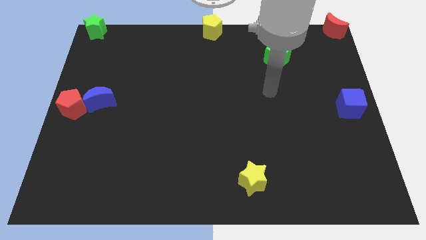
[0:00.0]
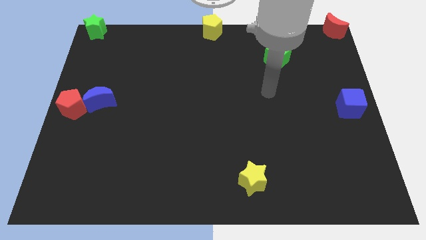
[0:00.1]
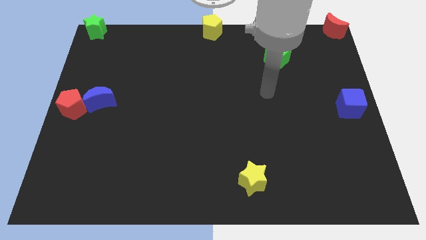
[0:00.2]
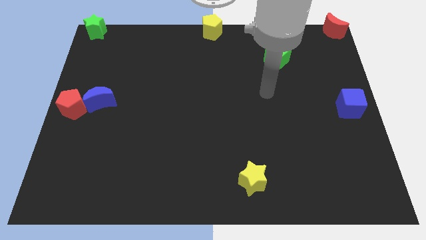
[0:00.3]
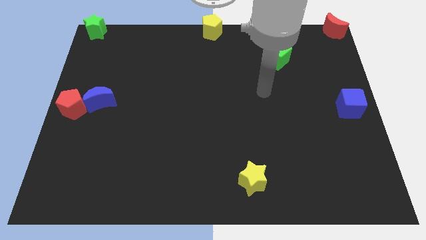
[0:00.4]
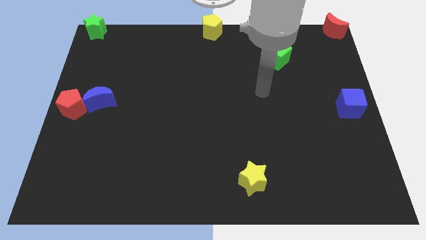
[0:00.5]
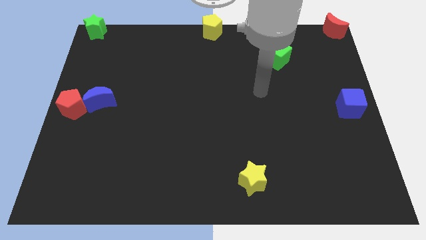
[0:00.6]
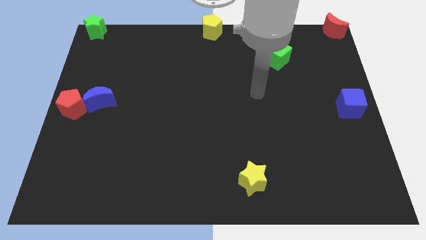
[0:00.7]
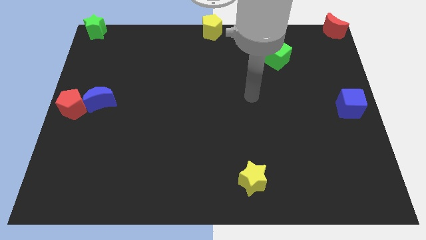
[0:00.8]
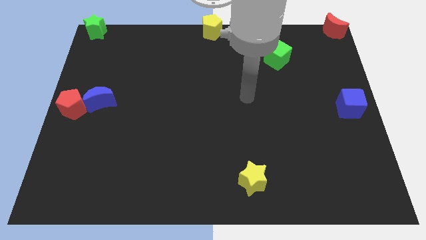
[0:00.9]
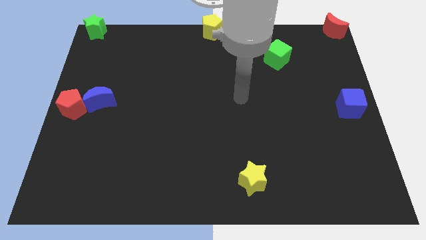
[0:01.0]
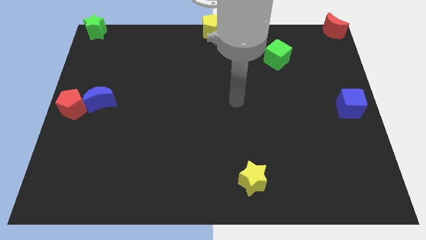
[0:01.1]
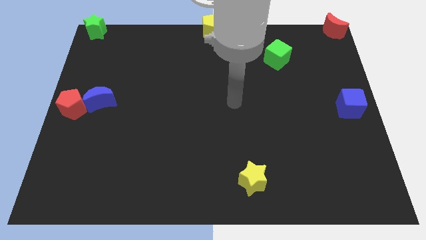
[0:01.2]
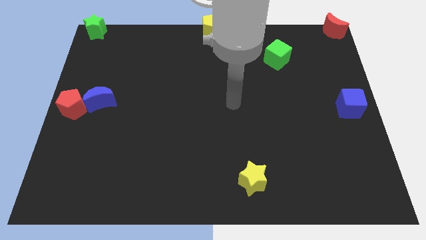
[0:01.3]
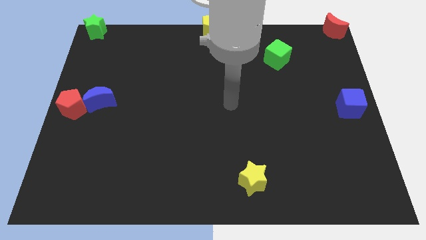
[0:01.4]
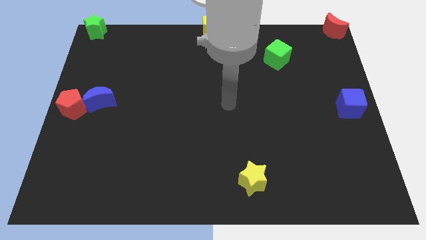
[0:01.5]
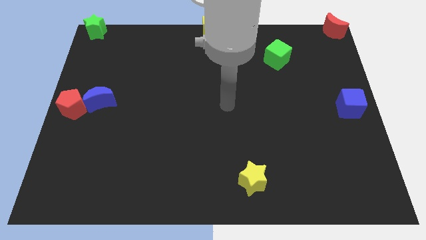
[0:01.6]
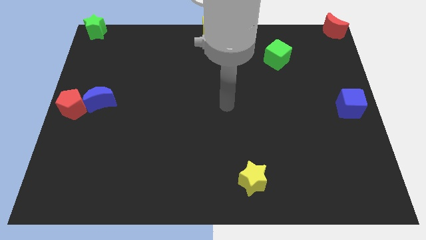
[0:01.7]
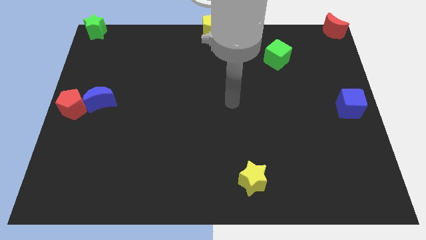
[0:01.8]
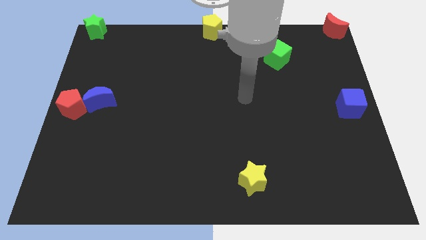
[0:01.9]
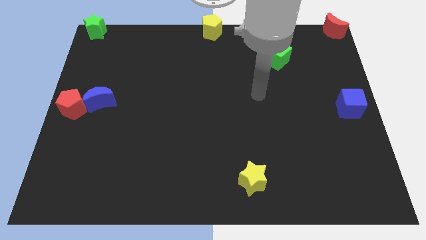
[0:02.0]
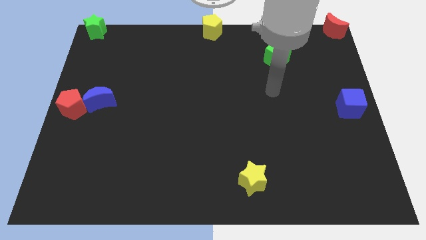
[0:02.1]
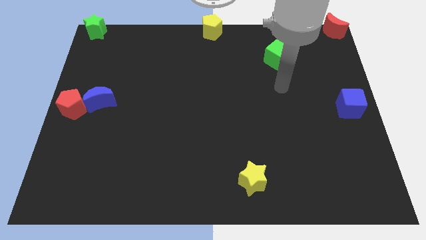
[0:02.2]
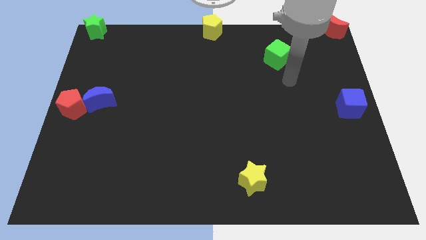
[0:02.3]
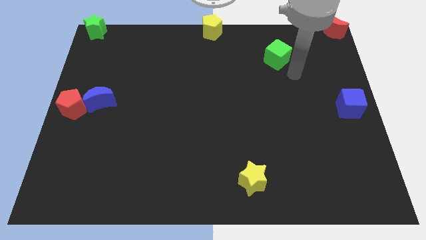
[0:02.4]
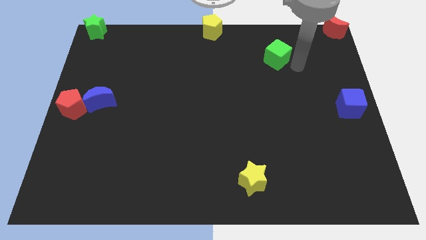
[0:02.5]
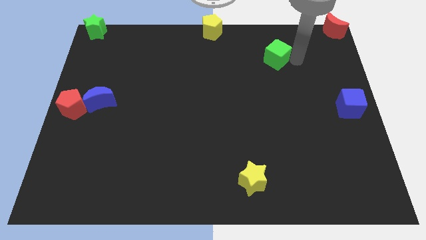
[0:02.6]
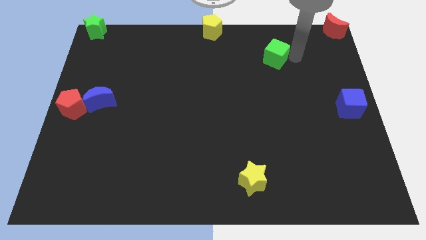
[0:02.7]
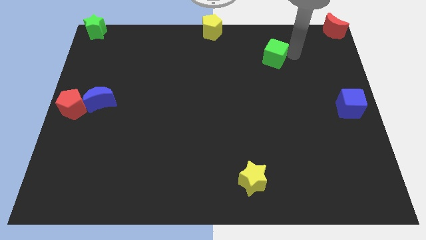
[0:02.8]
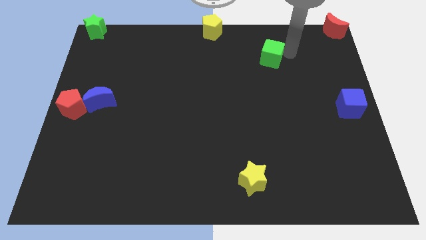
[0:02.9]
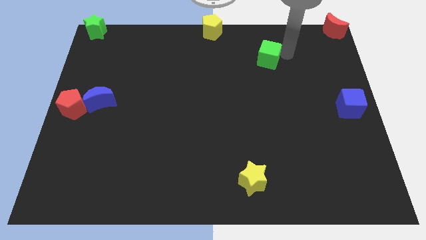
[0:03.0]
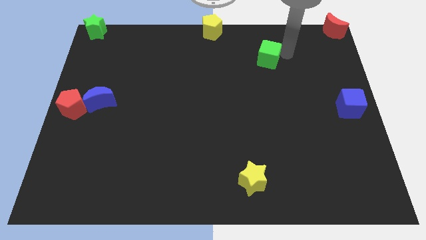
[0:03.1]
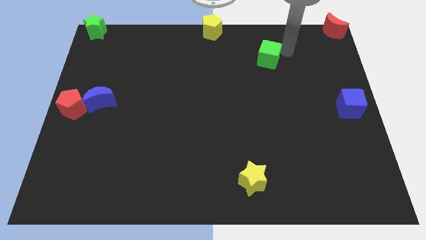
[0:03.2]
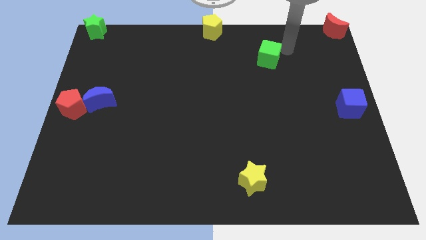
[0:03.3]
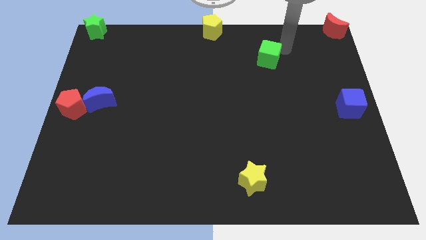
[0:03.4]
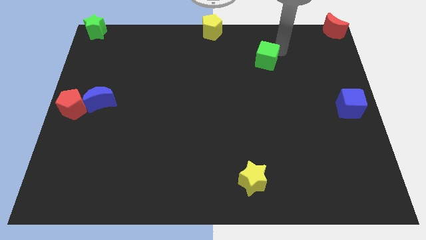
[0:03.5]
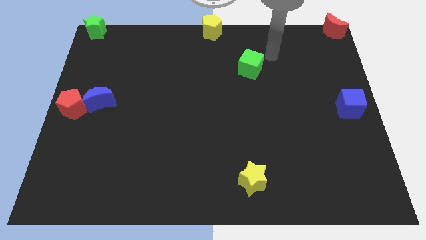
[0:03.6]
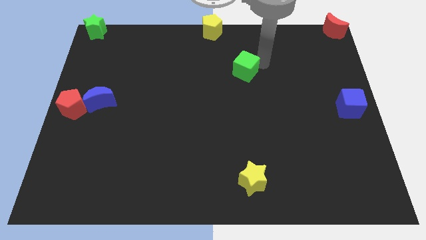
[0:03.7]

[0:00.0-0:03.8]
push green cube above yellow star

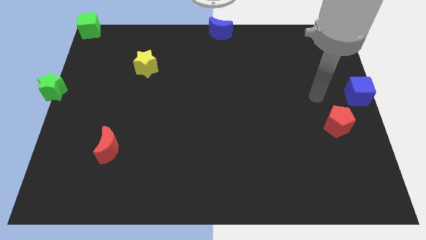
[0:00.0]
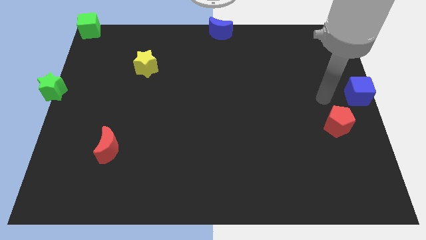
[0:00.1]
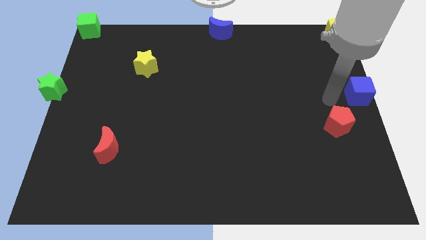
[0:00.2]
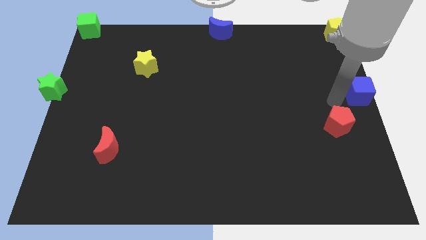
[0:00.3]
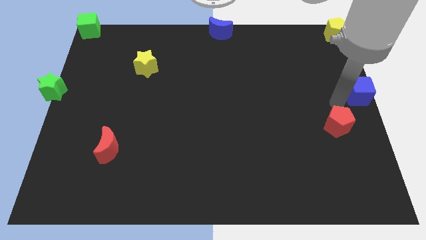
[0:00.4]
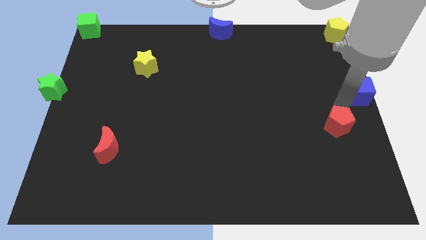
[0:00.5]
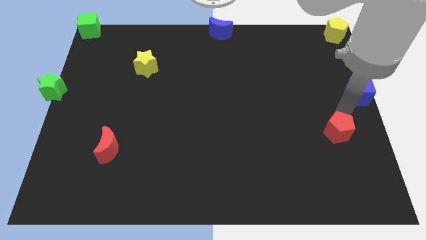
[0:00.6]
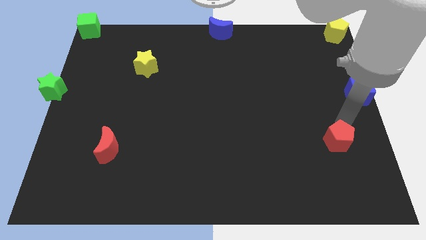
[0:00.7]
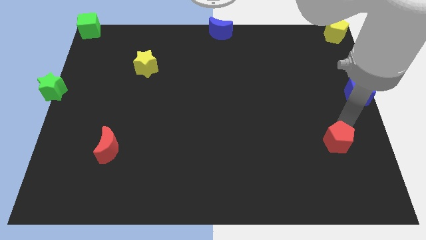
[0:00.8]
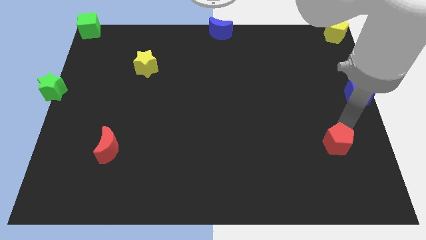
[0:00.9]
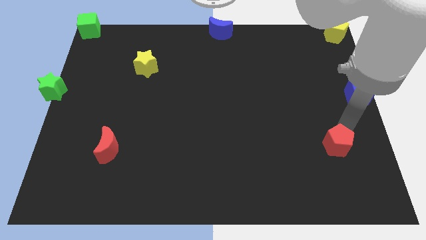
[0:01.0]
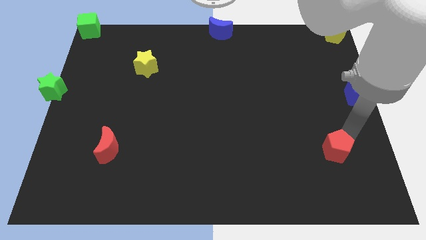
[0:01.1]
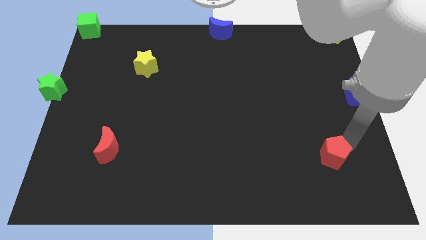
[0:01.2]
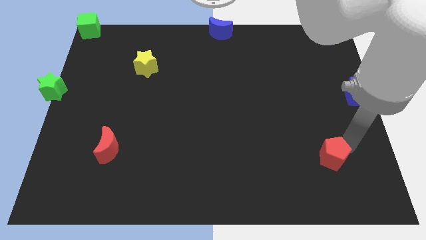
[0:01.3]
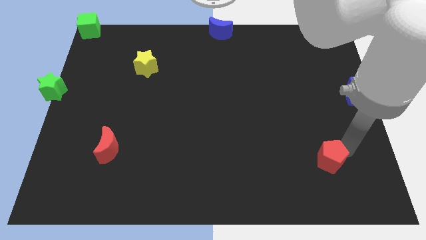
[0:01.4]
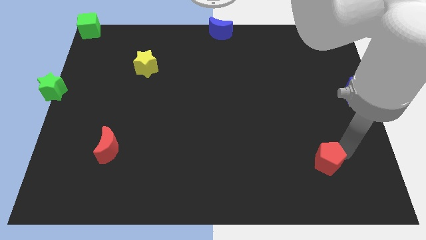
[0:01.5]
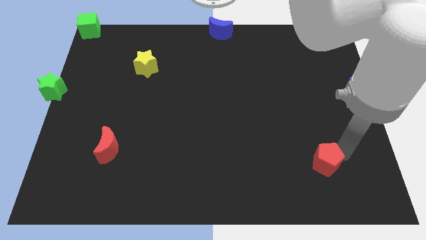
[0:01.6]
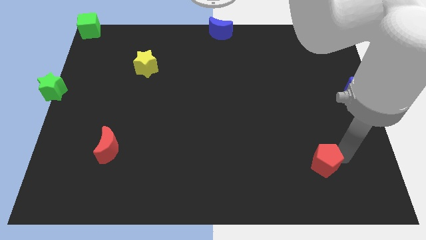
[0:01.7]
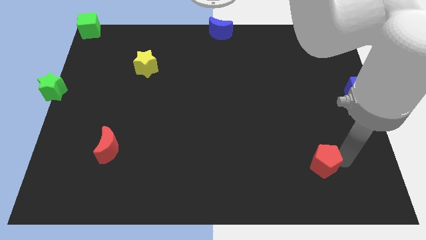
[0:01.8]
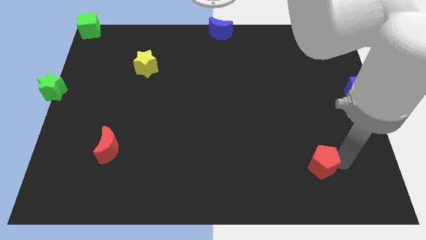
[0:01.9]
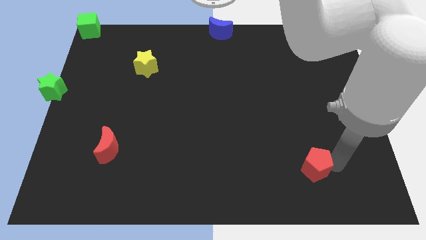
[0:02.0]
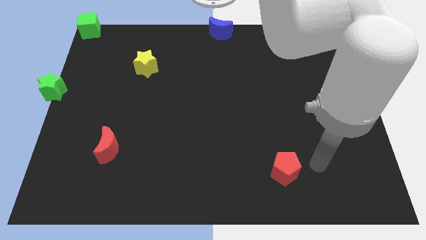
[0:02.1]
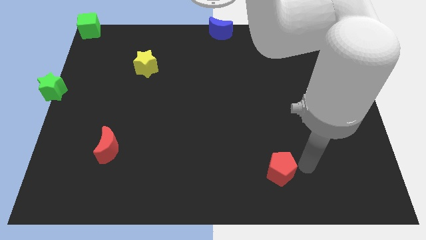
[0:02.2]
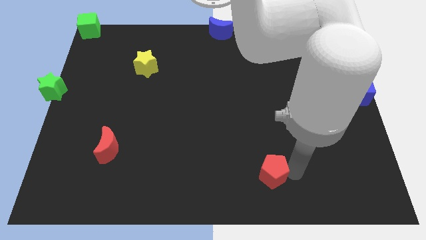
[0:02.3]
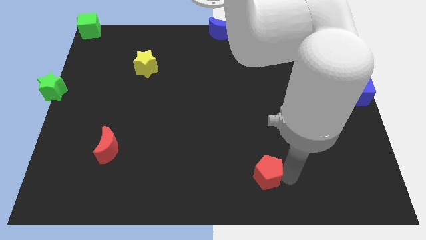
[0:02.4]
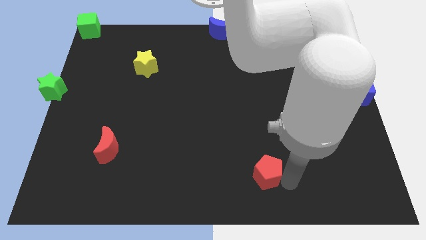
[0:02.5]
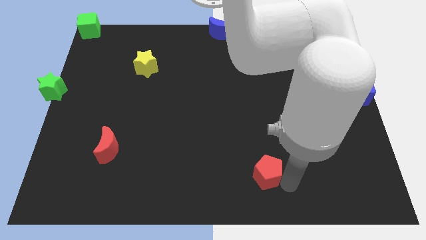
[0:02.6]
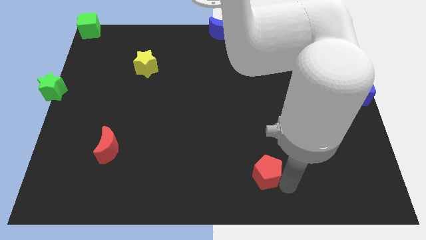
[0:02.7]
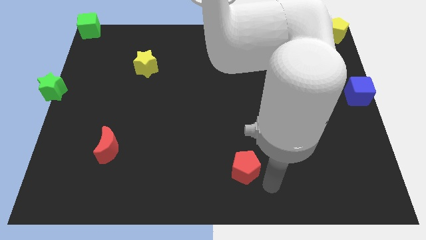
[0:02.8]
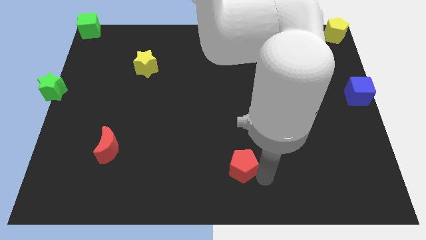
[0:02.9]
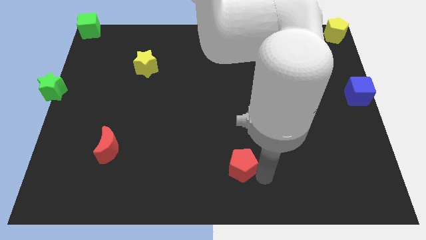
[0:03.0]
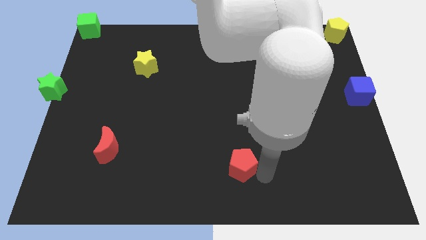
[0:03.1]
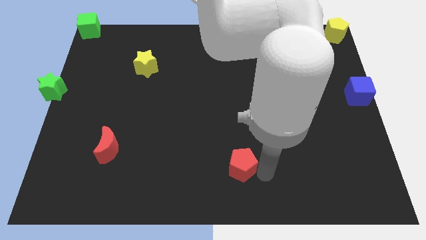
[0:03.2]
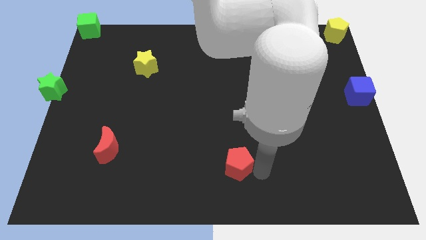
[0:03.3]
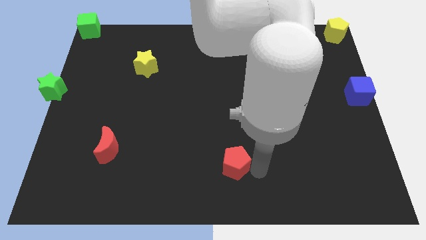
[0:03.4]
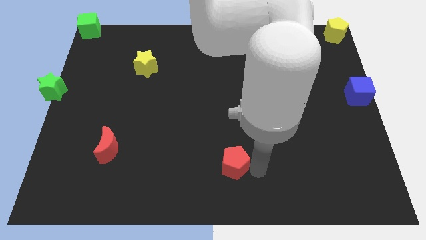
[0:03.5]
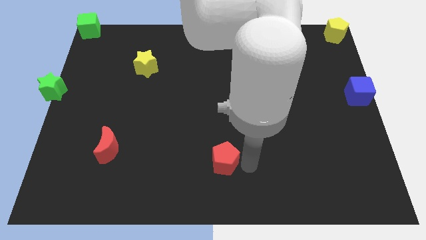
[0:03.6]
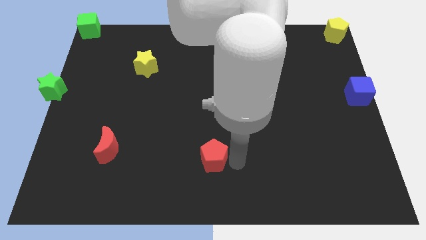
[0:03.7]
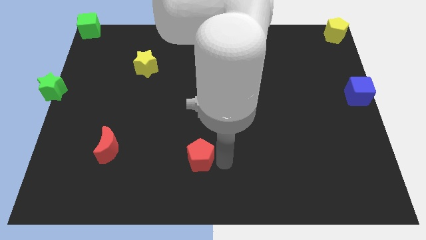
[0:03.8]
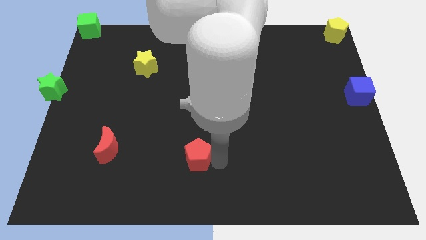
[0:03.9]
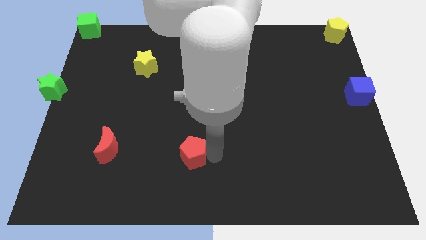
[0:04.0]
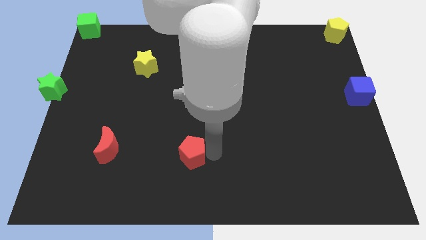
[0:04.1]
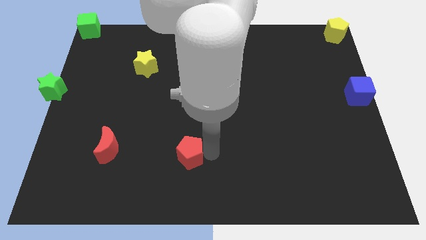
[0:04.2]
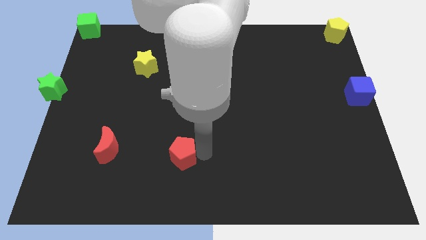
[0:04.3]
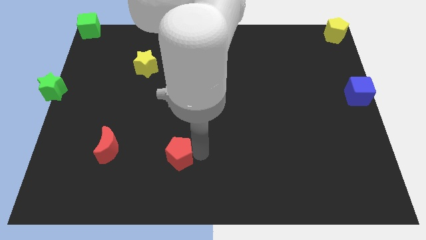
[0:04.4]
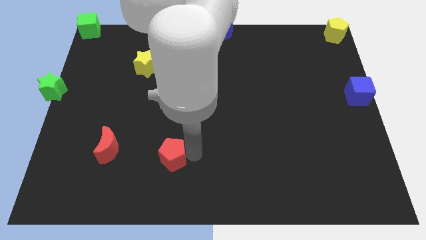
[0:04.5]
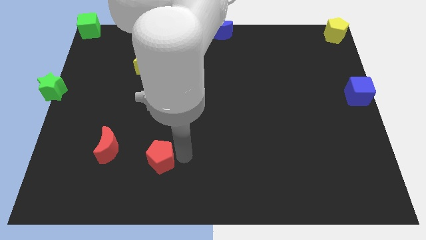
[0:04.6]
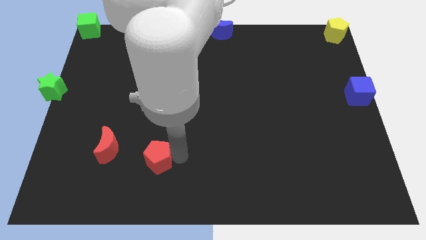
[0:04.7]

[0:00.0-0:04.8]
slide the red pentagon diagonally bottom left to the blue moon

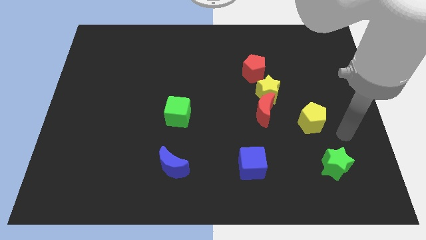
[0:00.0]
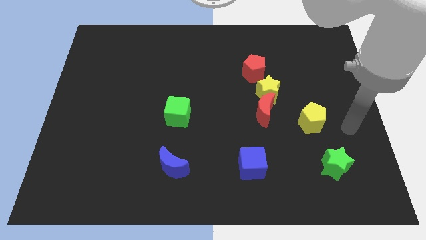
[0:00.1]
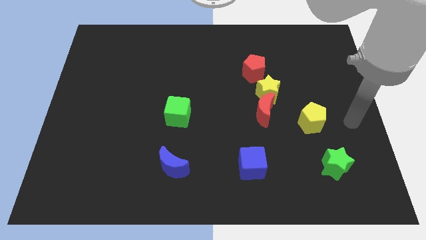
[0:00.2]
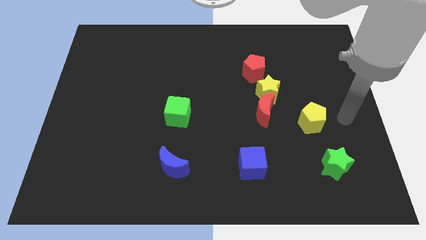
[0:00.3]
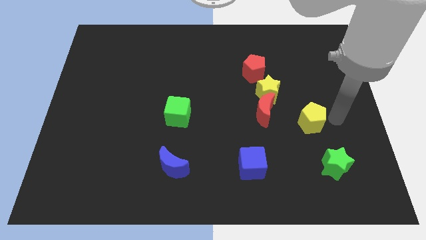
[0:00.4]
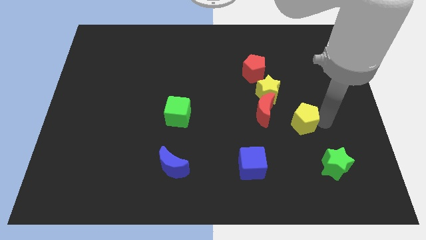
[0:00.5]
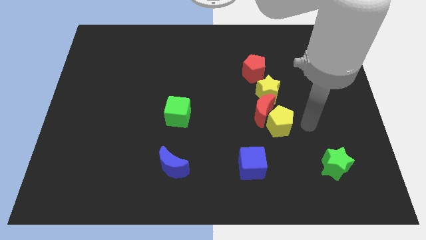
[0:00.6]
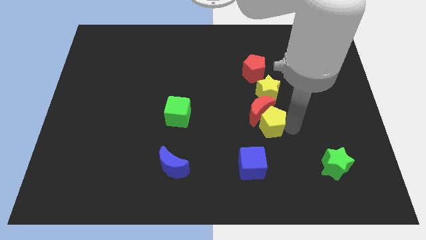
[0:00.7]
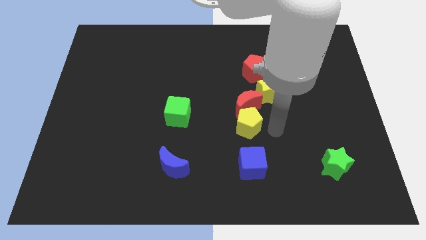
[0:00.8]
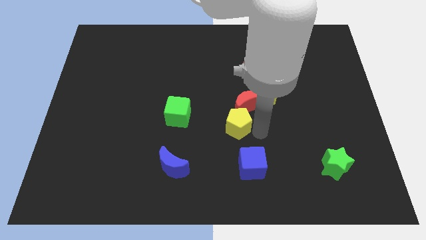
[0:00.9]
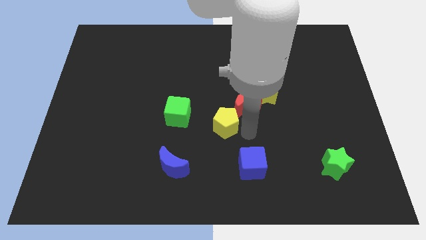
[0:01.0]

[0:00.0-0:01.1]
push the yellow pentagon to the center
